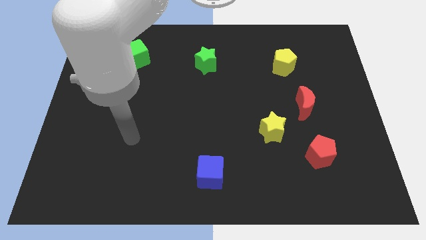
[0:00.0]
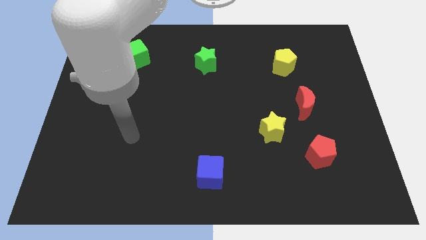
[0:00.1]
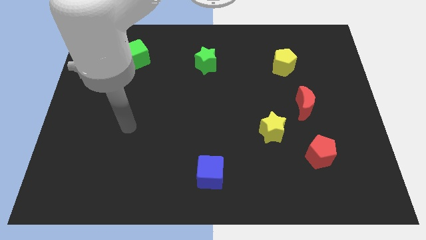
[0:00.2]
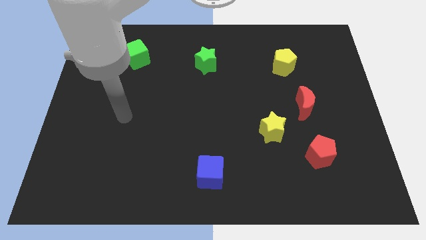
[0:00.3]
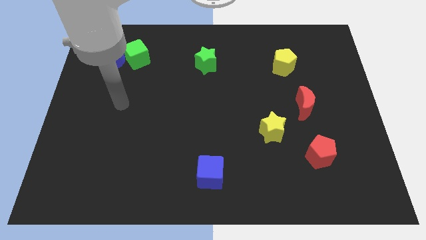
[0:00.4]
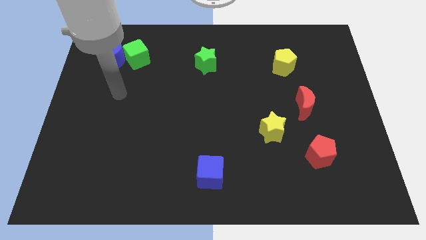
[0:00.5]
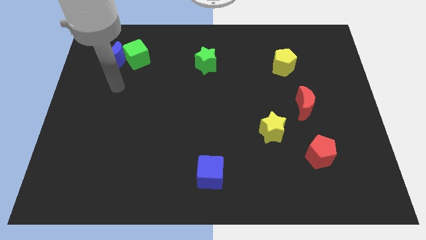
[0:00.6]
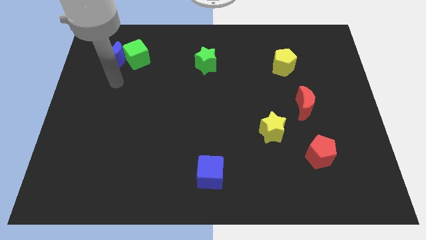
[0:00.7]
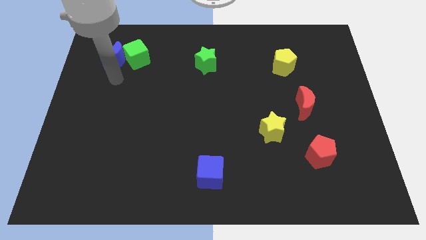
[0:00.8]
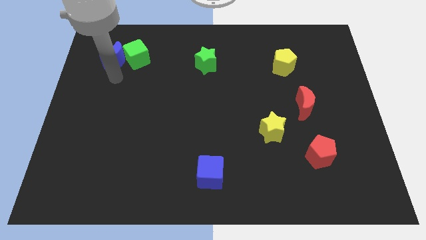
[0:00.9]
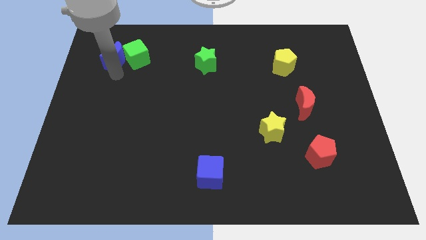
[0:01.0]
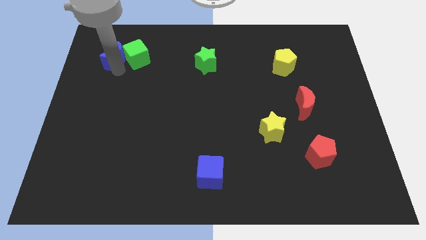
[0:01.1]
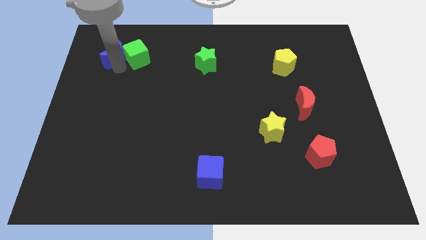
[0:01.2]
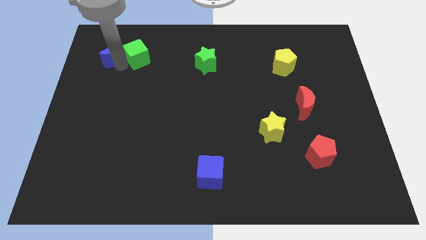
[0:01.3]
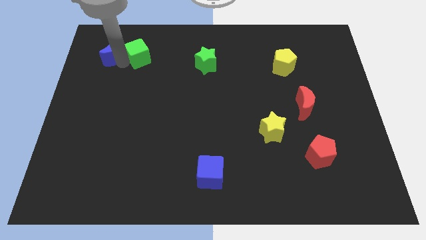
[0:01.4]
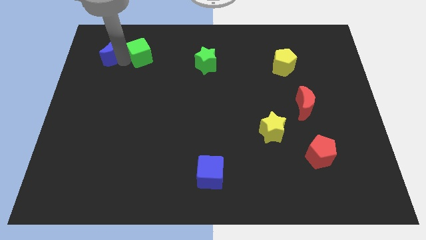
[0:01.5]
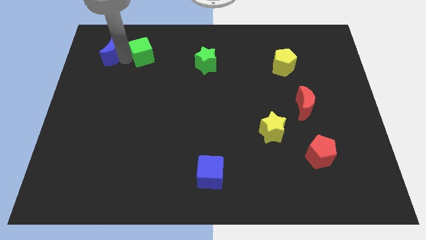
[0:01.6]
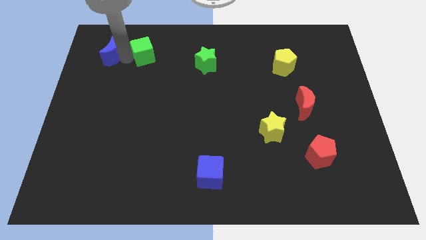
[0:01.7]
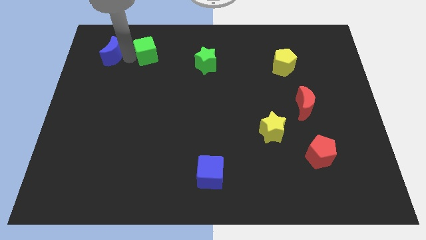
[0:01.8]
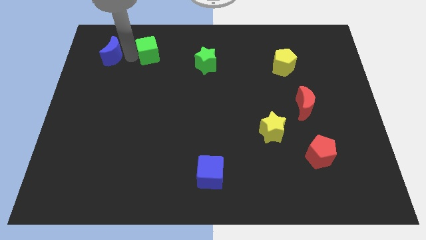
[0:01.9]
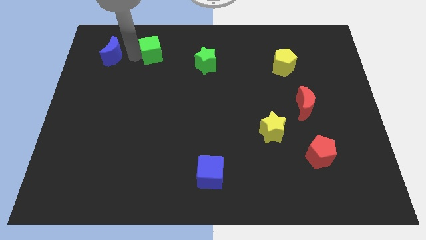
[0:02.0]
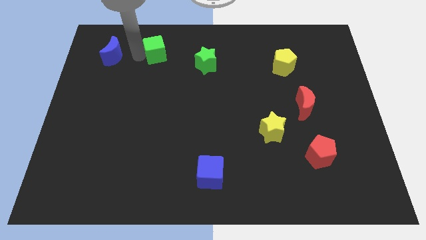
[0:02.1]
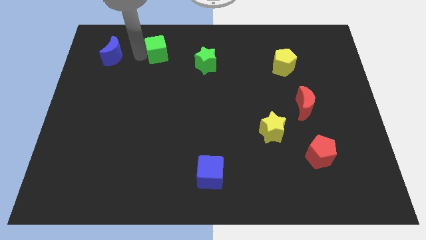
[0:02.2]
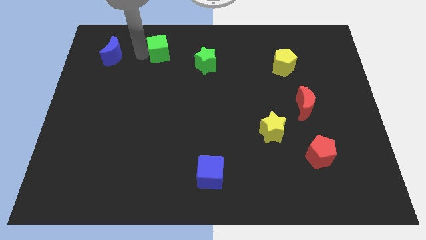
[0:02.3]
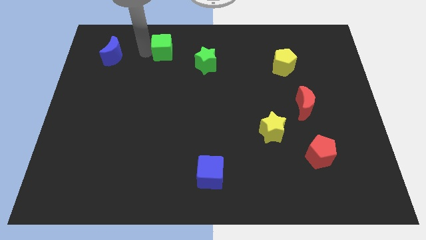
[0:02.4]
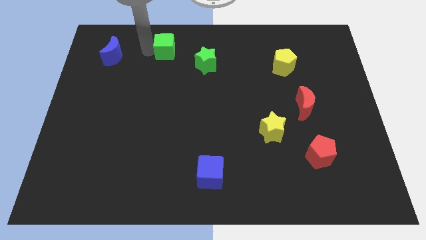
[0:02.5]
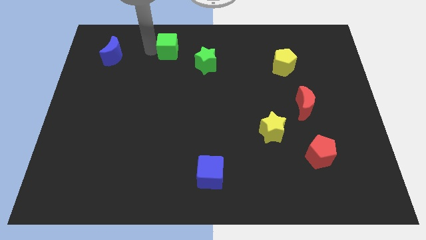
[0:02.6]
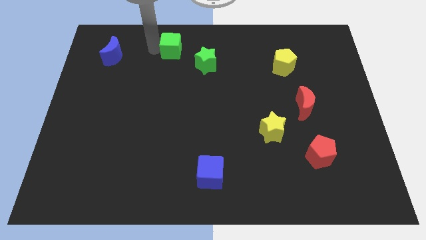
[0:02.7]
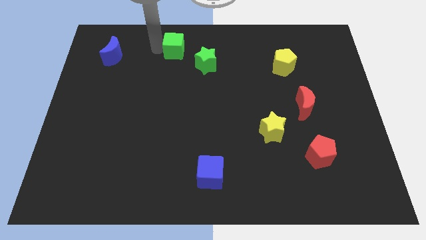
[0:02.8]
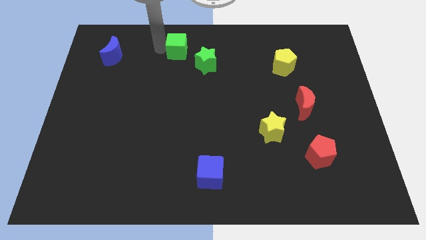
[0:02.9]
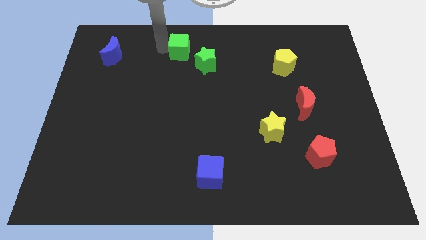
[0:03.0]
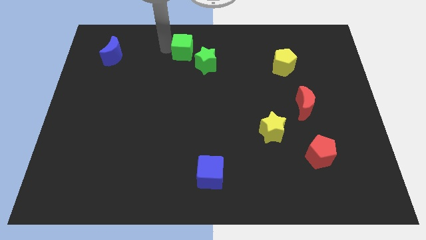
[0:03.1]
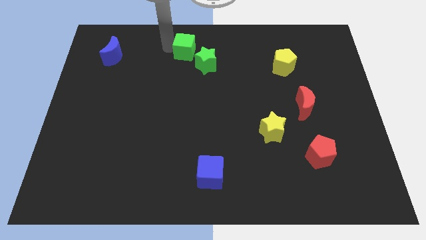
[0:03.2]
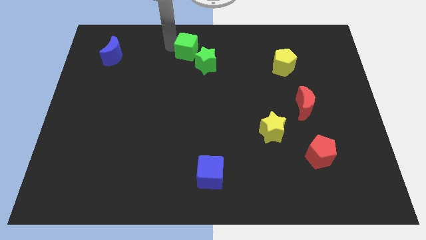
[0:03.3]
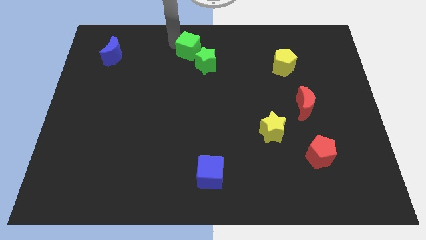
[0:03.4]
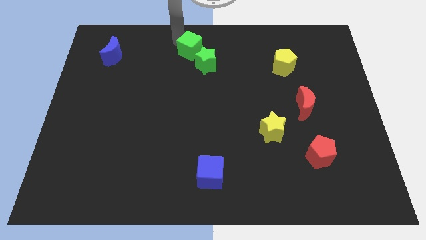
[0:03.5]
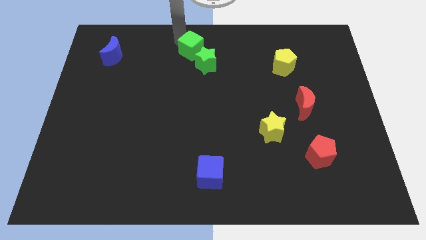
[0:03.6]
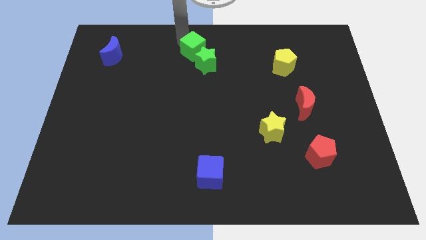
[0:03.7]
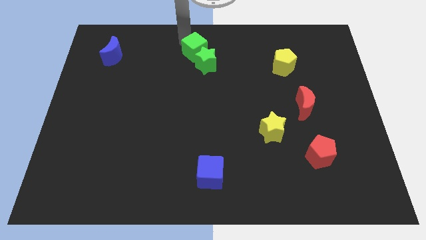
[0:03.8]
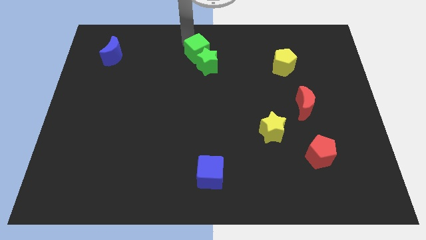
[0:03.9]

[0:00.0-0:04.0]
slide the green cube next to the green star

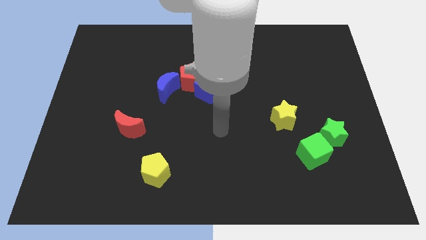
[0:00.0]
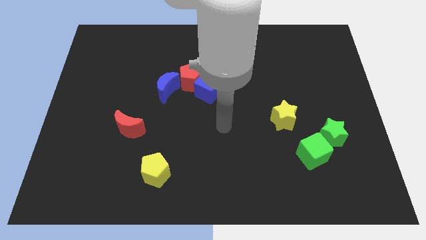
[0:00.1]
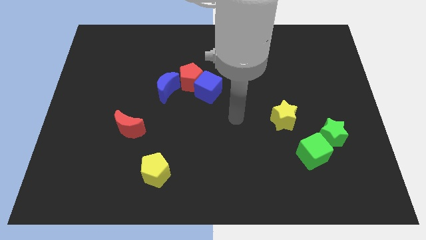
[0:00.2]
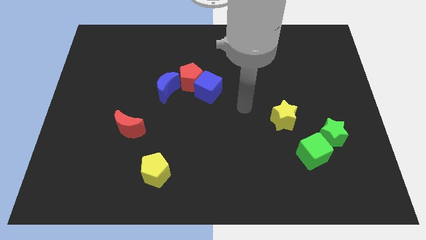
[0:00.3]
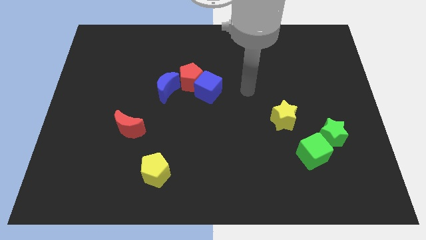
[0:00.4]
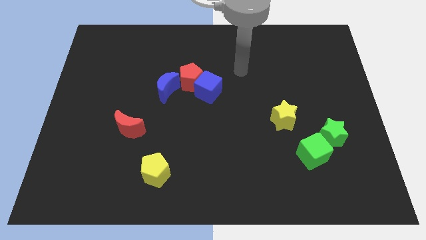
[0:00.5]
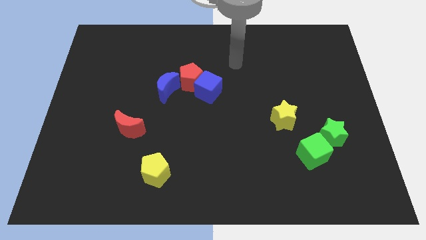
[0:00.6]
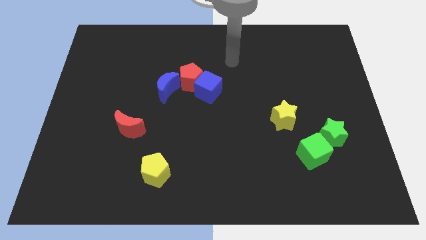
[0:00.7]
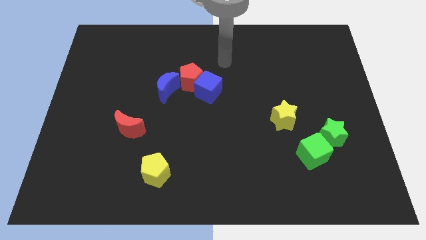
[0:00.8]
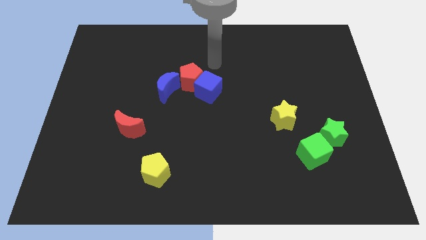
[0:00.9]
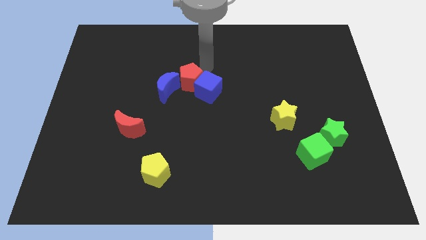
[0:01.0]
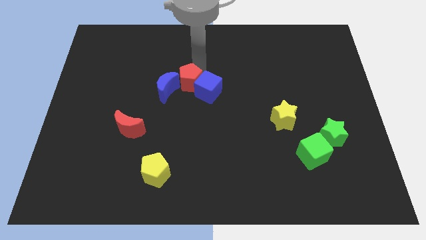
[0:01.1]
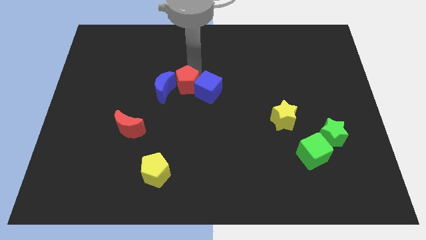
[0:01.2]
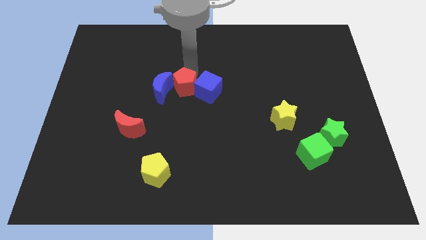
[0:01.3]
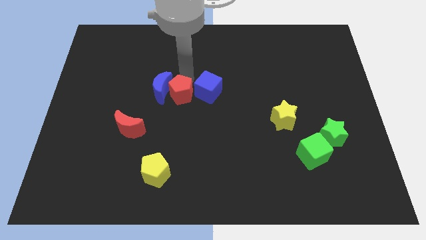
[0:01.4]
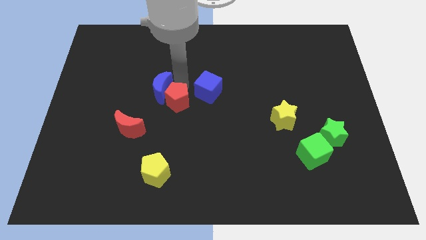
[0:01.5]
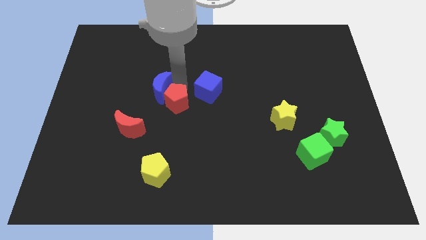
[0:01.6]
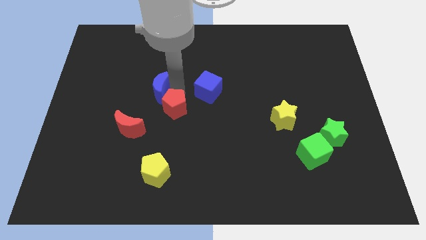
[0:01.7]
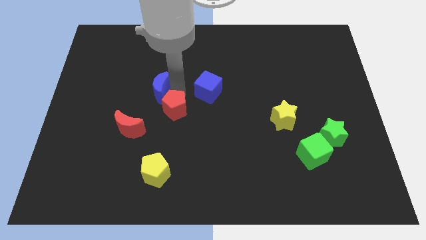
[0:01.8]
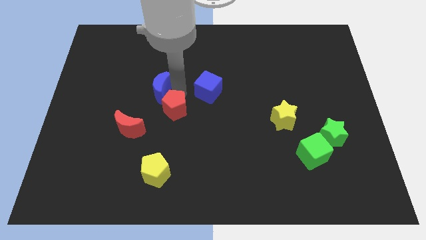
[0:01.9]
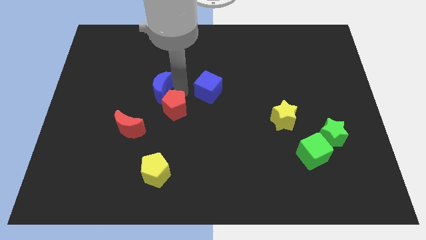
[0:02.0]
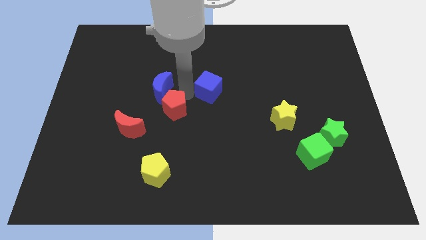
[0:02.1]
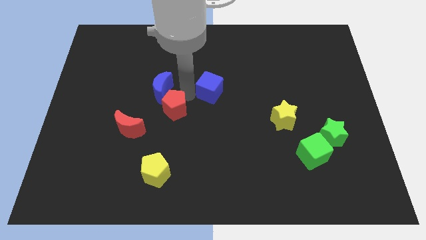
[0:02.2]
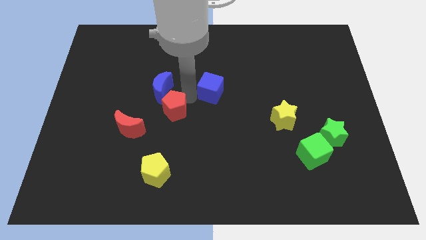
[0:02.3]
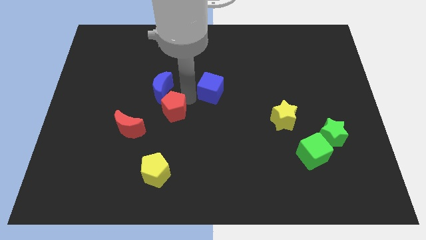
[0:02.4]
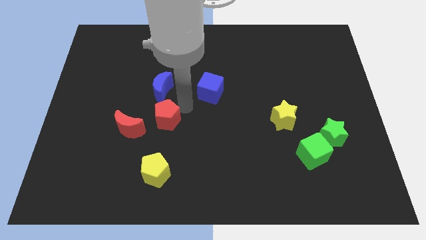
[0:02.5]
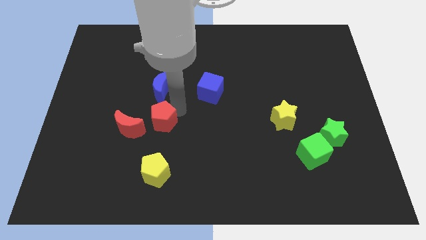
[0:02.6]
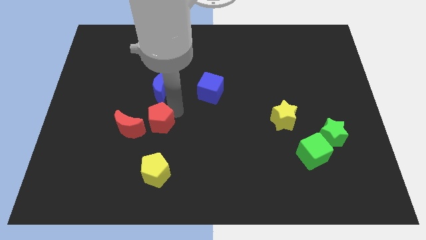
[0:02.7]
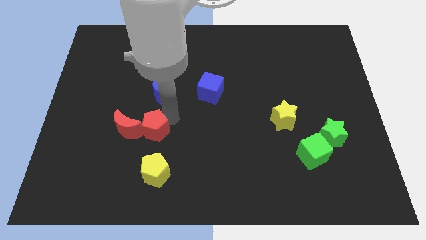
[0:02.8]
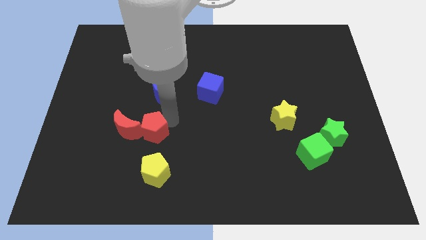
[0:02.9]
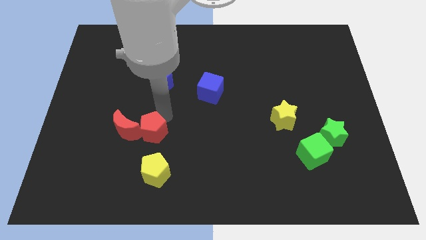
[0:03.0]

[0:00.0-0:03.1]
put the red pentagon next to the red moon

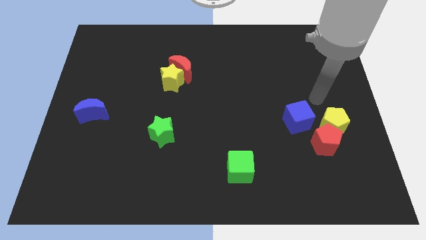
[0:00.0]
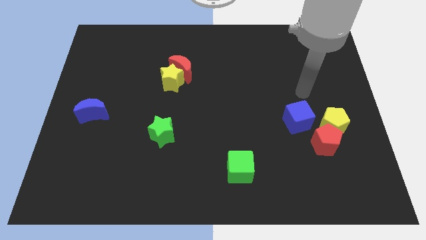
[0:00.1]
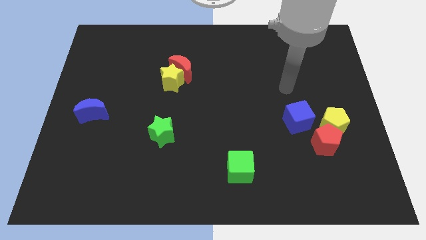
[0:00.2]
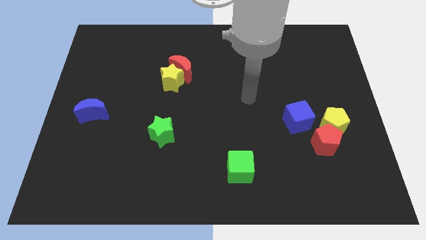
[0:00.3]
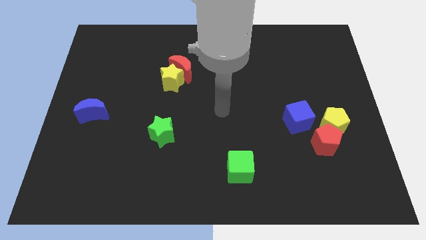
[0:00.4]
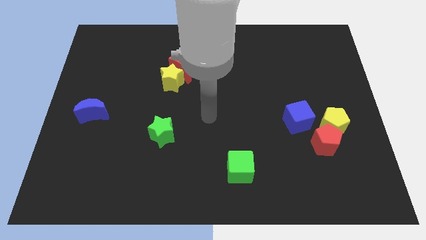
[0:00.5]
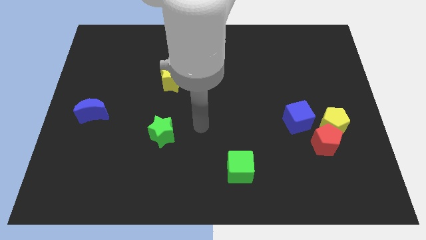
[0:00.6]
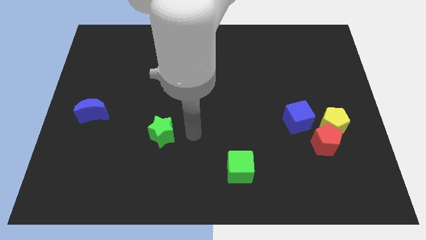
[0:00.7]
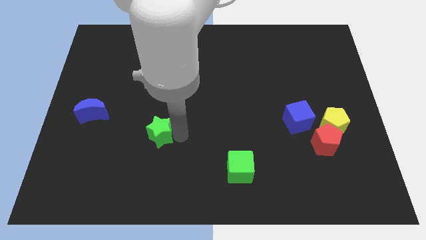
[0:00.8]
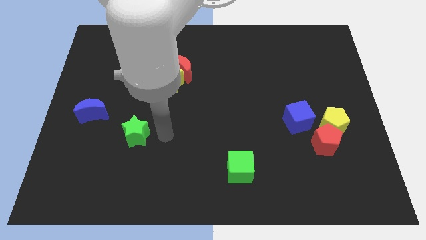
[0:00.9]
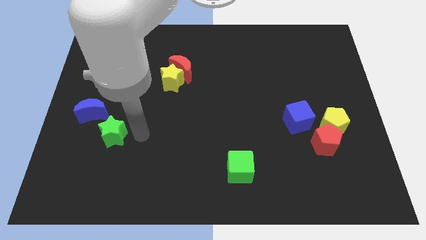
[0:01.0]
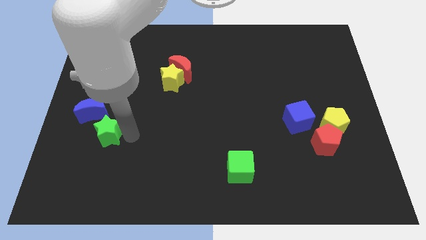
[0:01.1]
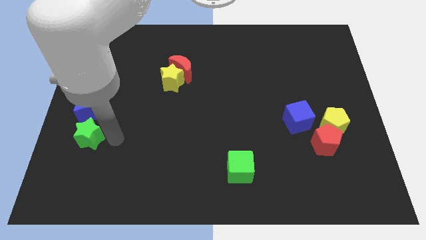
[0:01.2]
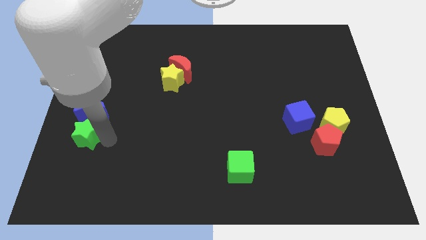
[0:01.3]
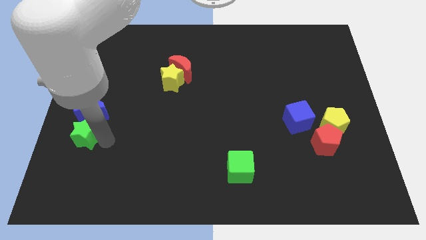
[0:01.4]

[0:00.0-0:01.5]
slide the green star towards the blue moon
